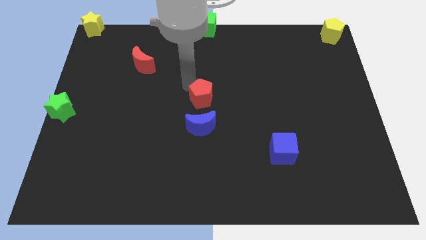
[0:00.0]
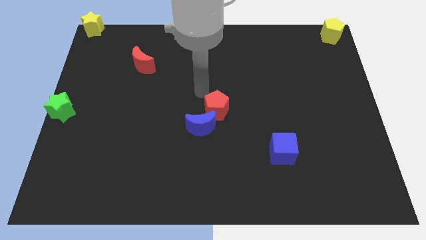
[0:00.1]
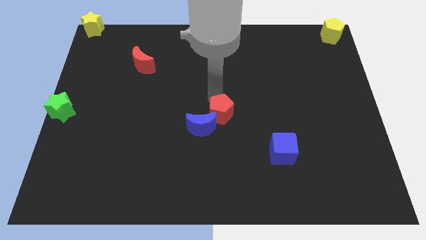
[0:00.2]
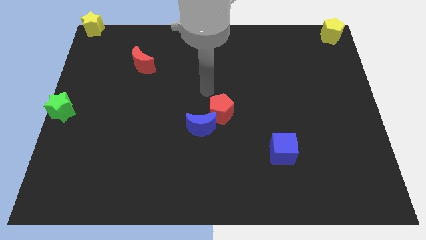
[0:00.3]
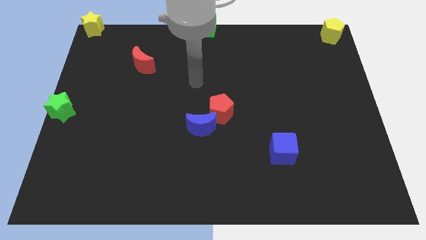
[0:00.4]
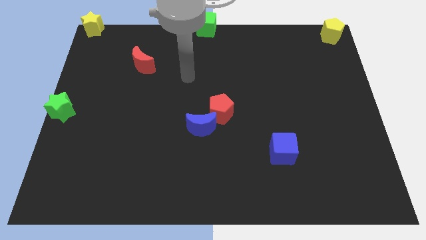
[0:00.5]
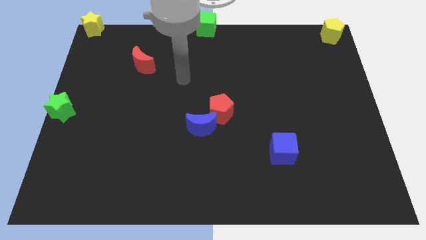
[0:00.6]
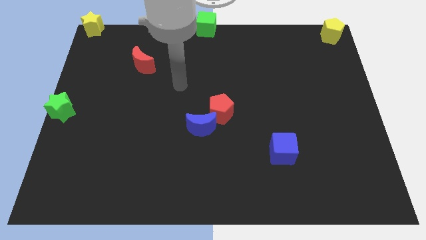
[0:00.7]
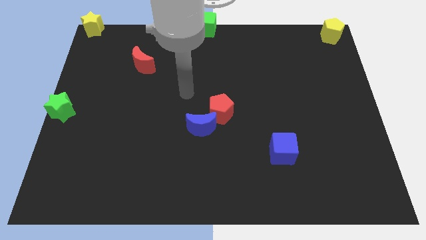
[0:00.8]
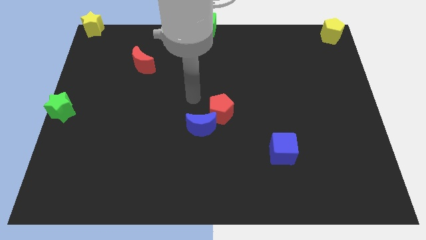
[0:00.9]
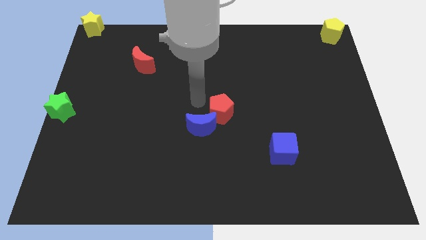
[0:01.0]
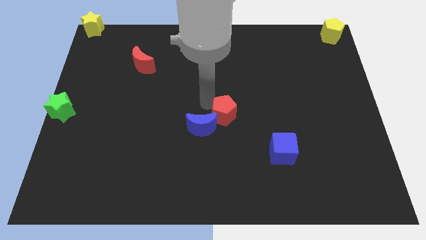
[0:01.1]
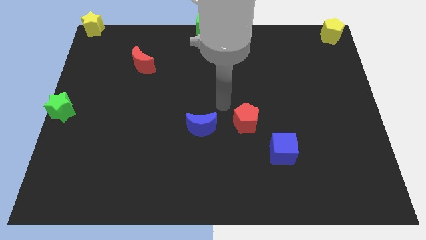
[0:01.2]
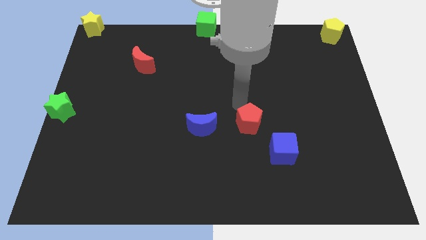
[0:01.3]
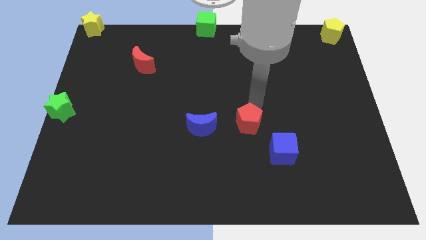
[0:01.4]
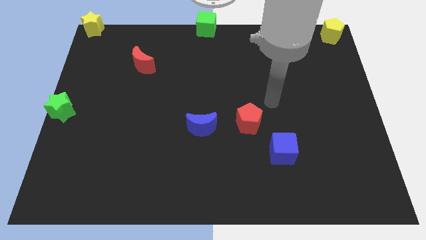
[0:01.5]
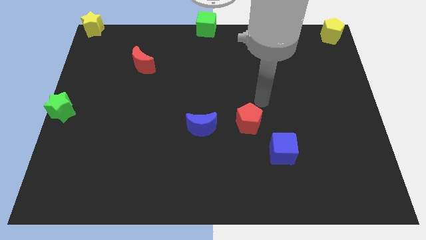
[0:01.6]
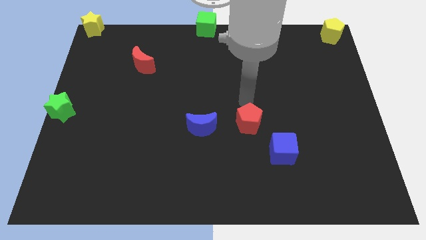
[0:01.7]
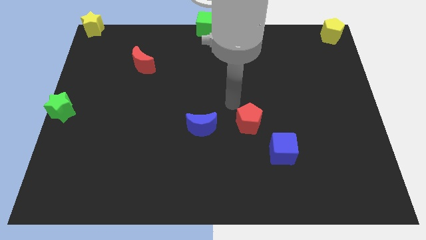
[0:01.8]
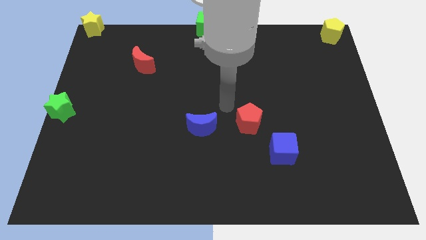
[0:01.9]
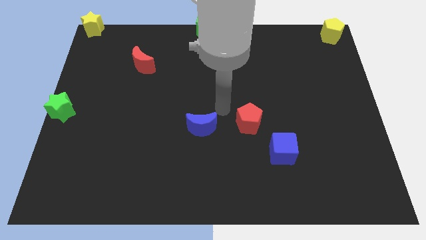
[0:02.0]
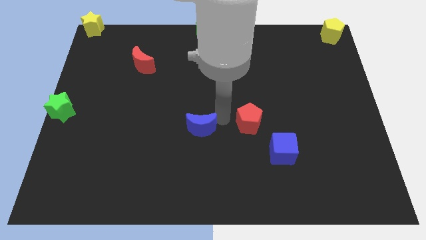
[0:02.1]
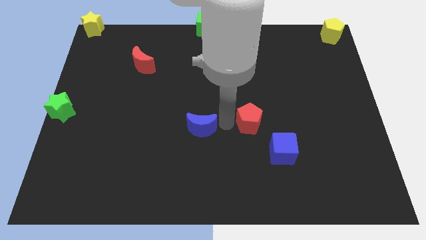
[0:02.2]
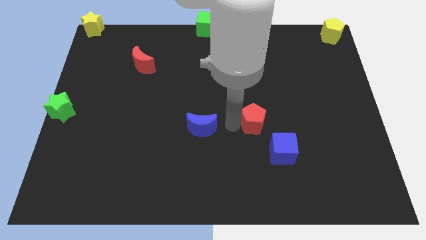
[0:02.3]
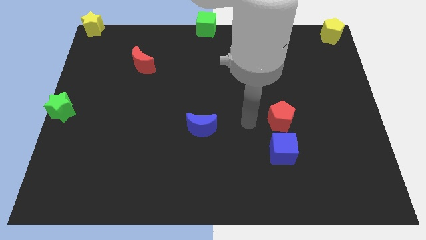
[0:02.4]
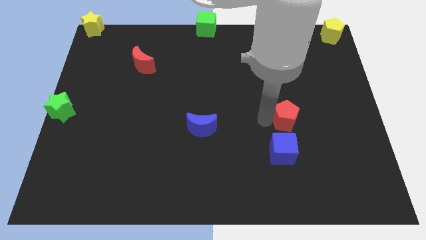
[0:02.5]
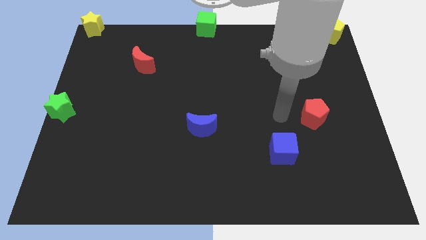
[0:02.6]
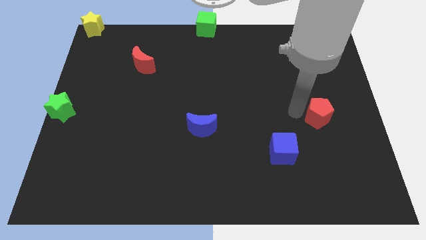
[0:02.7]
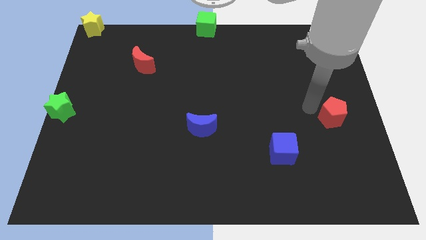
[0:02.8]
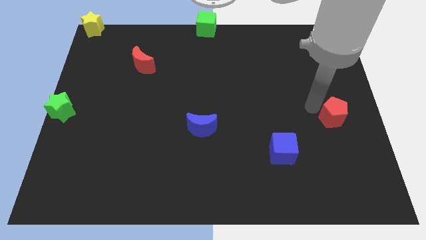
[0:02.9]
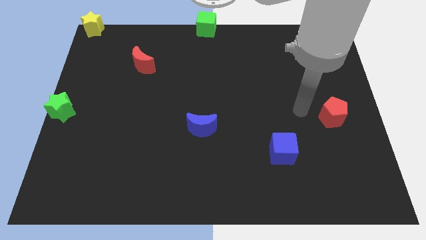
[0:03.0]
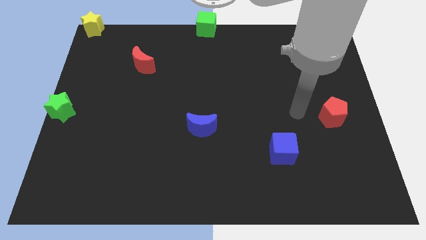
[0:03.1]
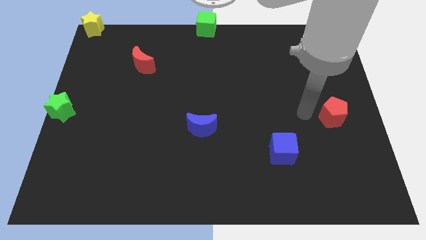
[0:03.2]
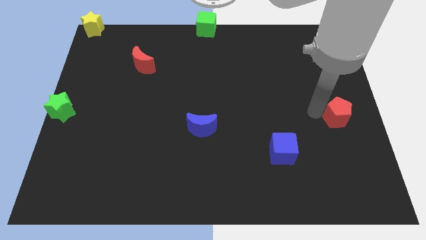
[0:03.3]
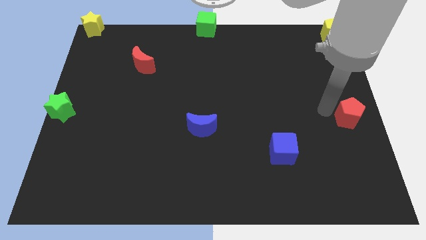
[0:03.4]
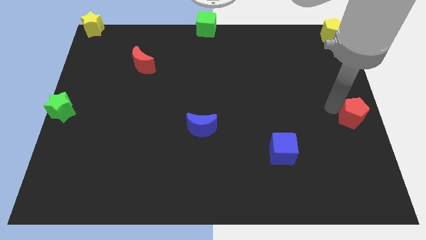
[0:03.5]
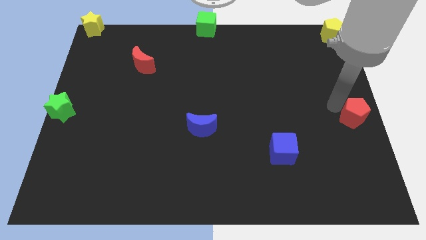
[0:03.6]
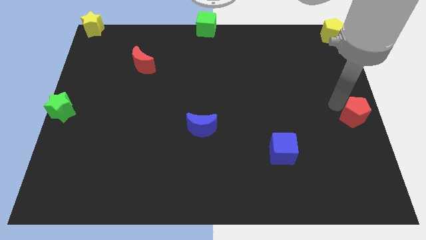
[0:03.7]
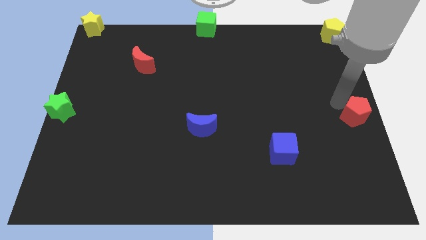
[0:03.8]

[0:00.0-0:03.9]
drag the red pentagon to the center right side of the board

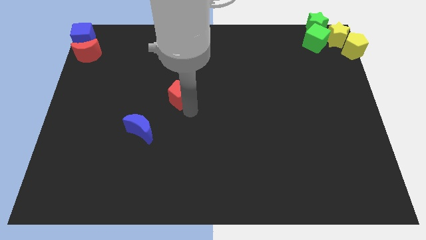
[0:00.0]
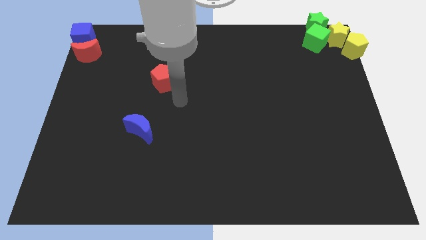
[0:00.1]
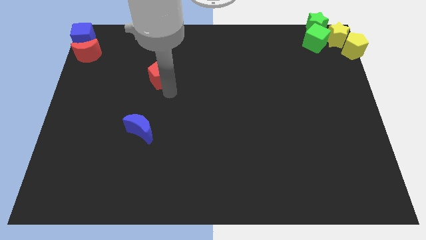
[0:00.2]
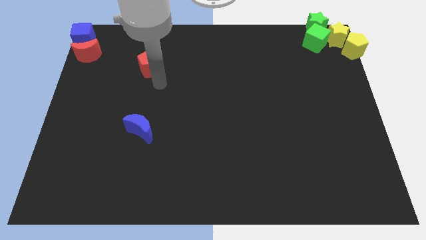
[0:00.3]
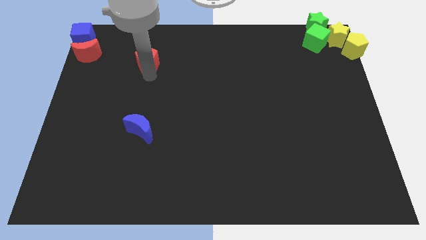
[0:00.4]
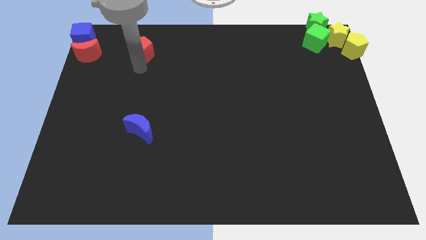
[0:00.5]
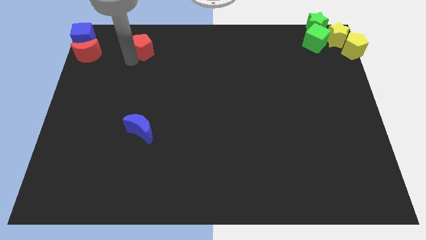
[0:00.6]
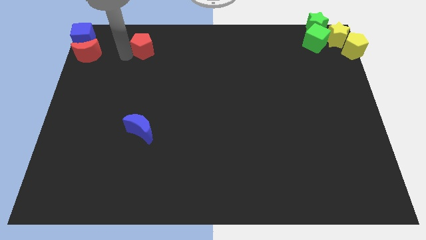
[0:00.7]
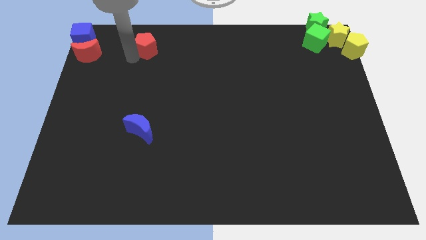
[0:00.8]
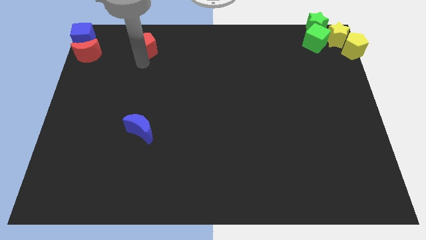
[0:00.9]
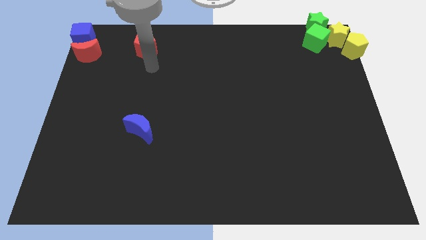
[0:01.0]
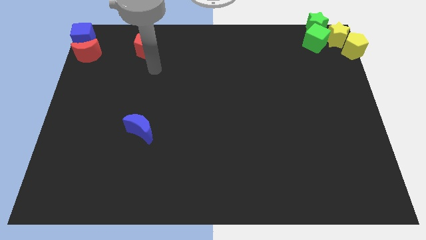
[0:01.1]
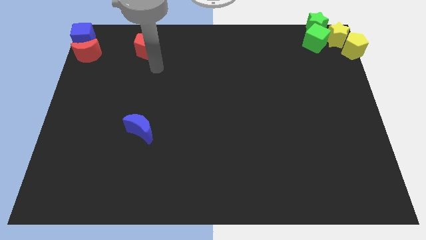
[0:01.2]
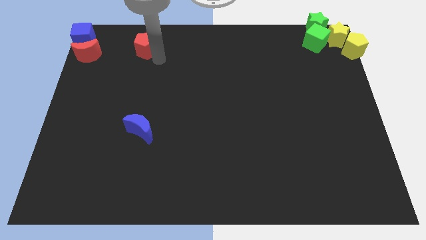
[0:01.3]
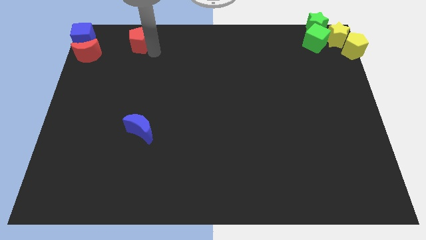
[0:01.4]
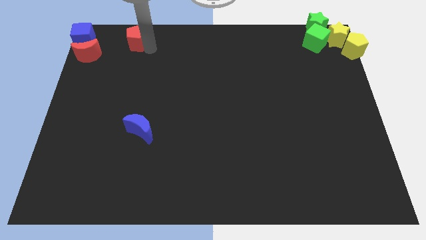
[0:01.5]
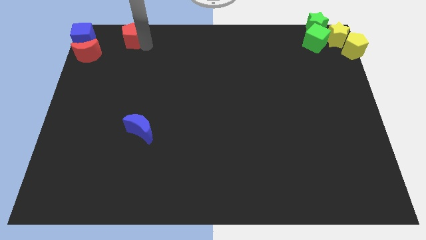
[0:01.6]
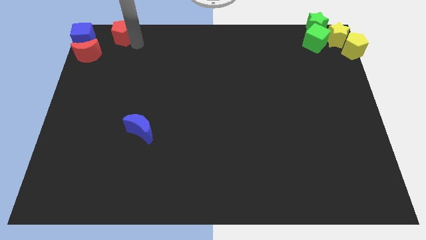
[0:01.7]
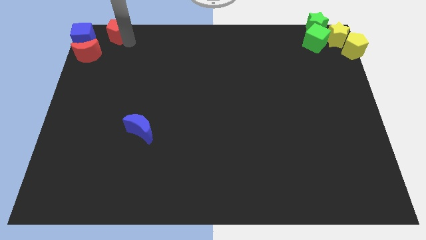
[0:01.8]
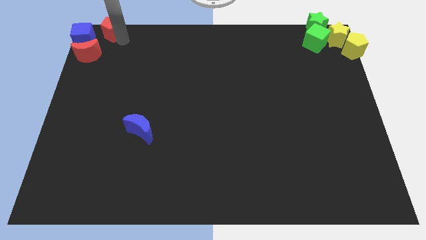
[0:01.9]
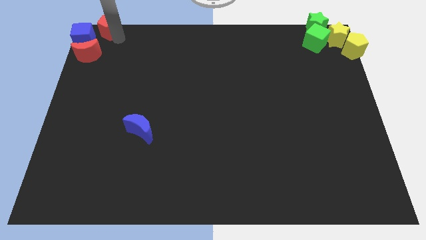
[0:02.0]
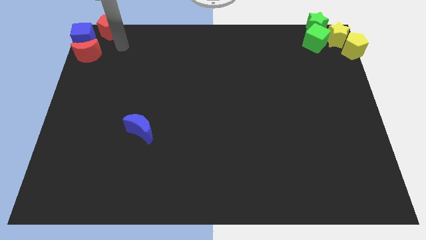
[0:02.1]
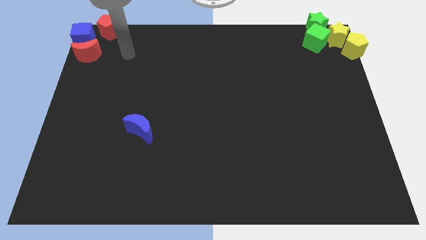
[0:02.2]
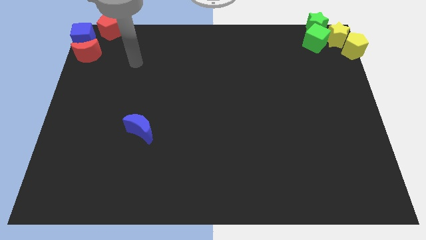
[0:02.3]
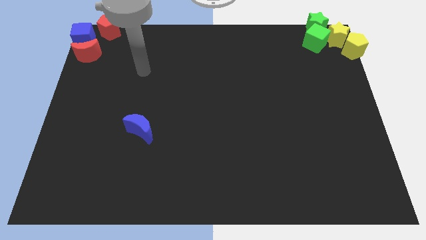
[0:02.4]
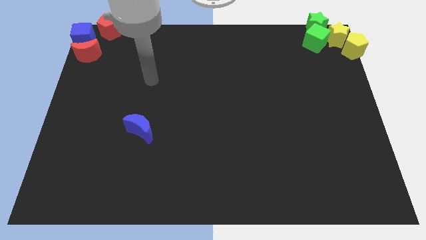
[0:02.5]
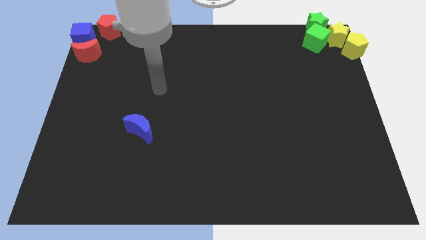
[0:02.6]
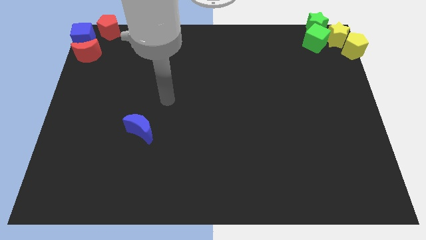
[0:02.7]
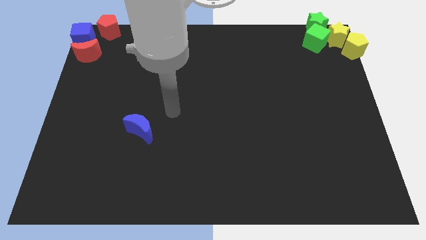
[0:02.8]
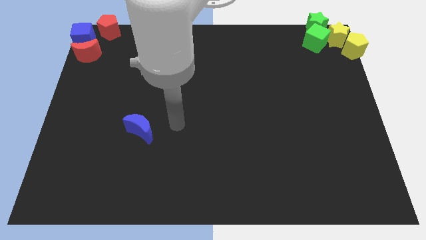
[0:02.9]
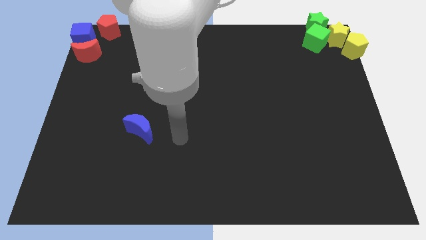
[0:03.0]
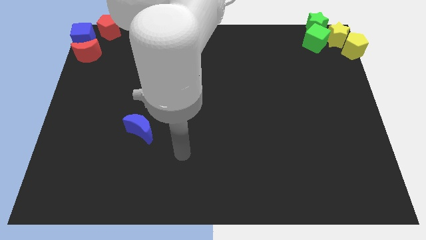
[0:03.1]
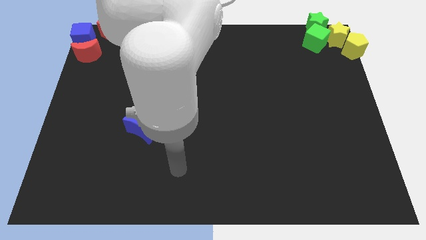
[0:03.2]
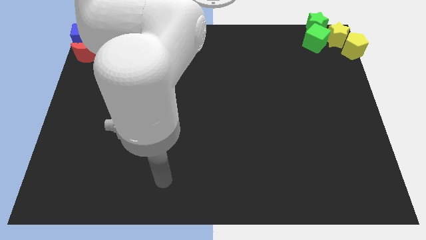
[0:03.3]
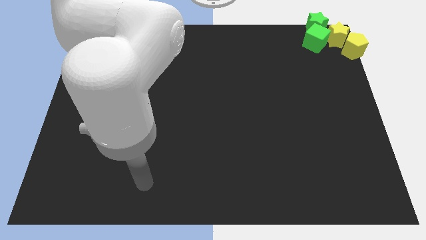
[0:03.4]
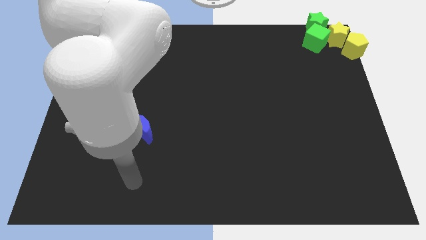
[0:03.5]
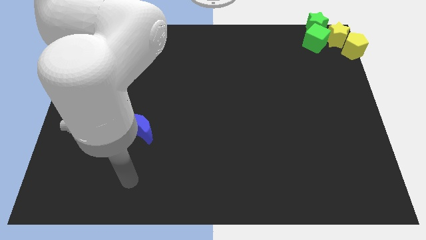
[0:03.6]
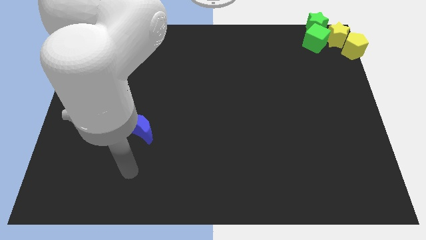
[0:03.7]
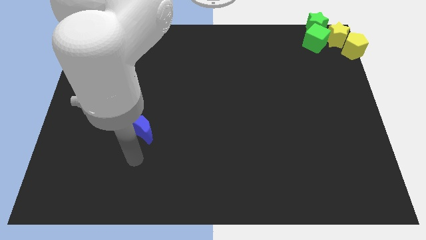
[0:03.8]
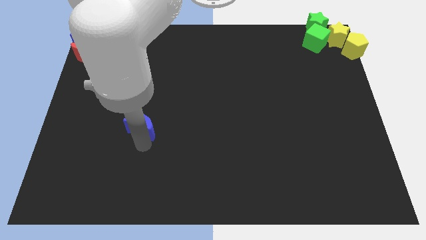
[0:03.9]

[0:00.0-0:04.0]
move your arm towards the blue crescent

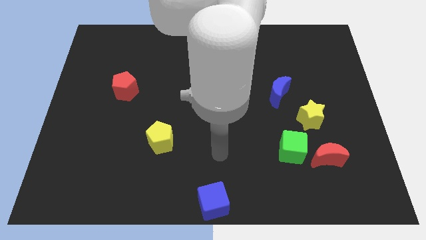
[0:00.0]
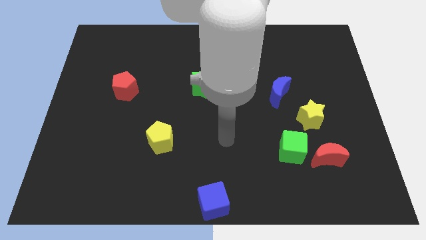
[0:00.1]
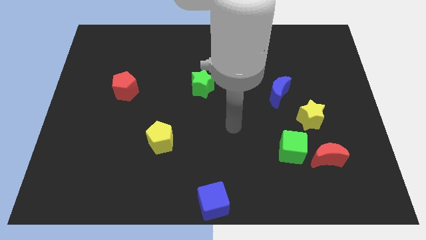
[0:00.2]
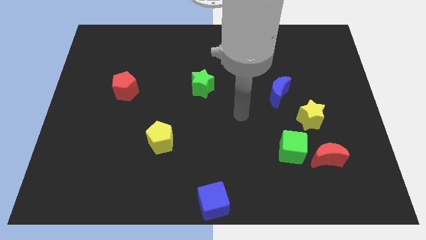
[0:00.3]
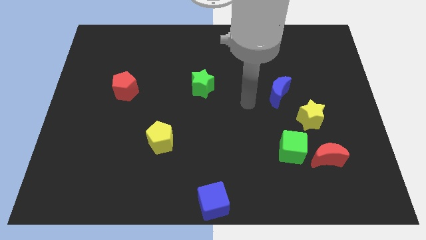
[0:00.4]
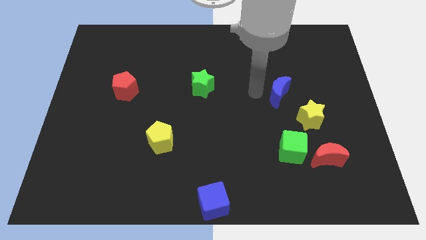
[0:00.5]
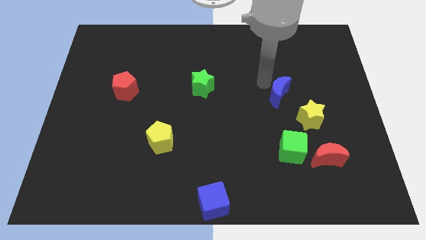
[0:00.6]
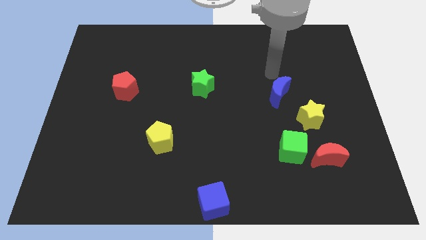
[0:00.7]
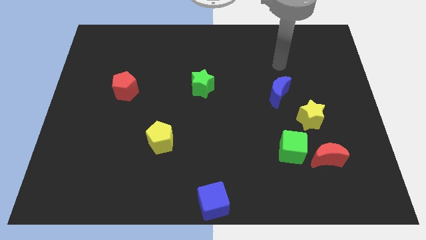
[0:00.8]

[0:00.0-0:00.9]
move arm close to blue moon

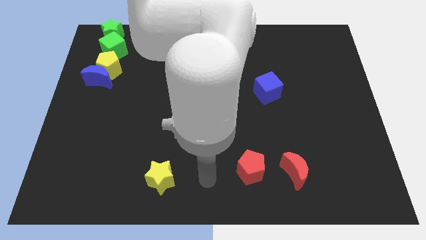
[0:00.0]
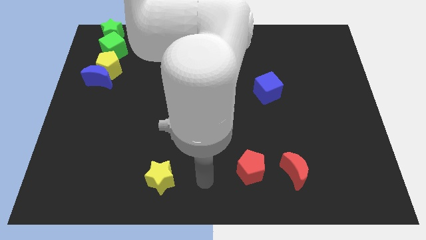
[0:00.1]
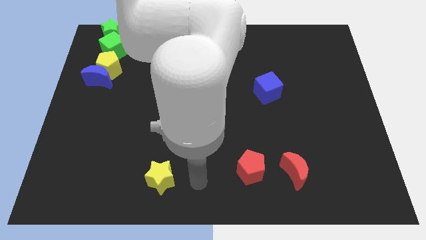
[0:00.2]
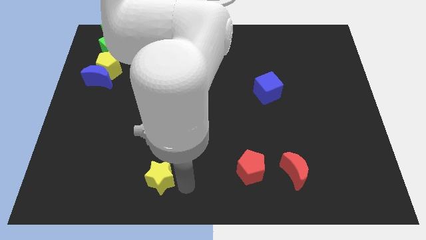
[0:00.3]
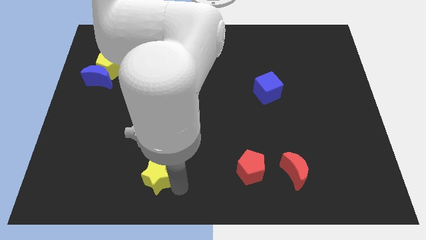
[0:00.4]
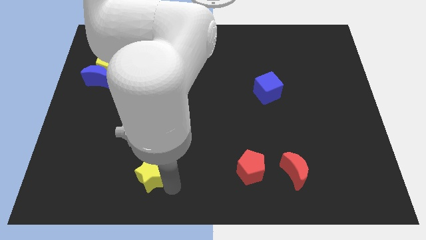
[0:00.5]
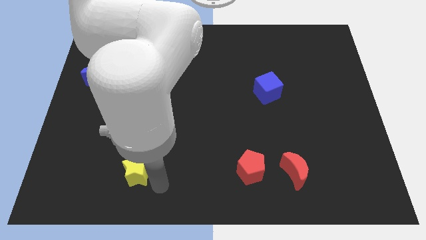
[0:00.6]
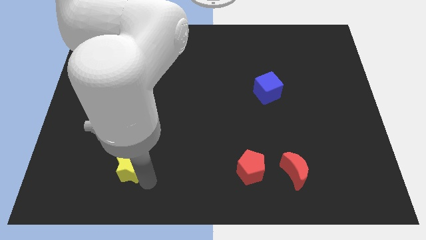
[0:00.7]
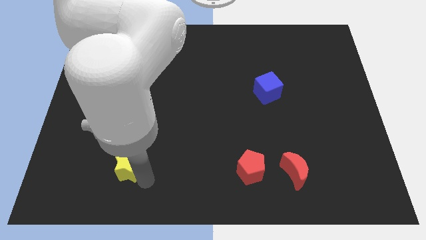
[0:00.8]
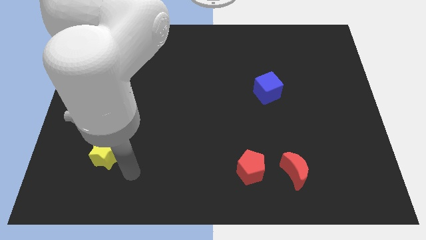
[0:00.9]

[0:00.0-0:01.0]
move yellow star to the left side
